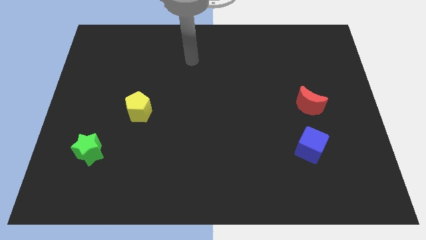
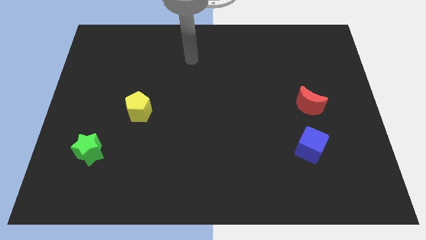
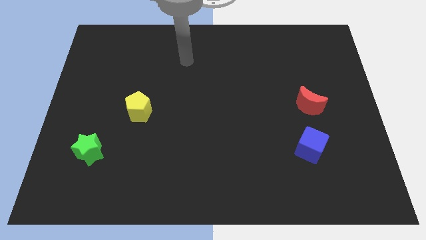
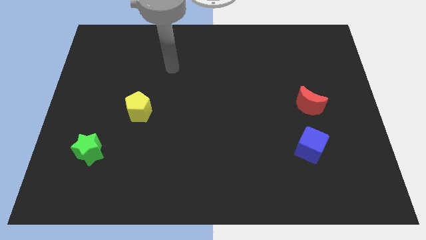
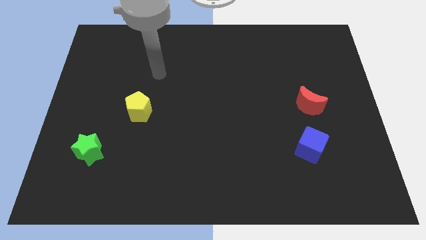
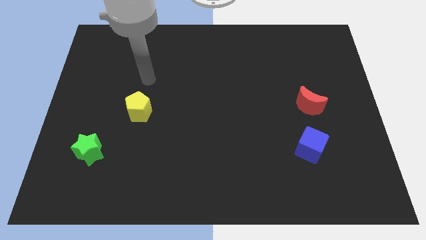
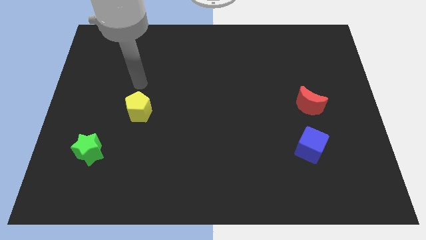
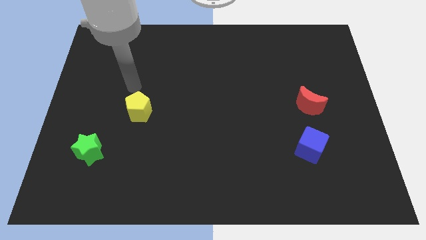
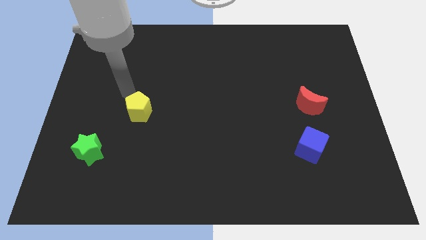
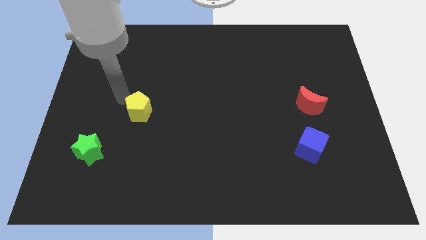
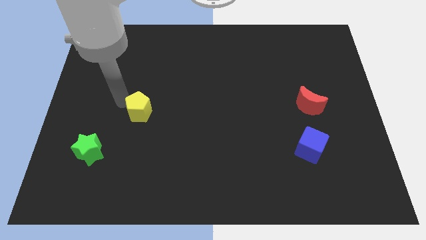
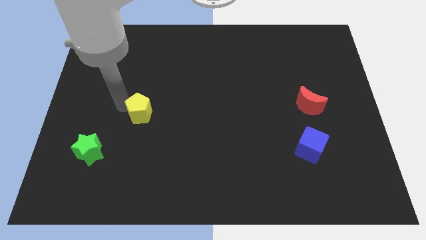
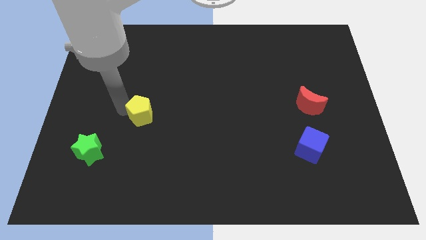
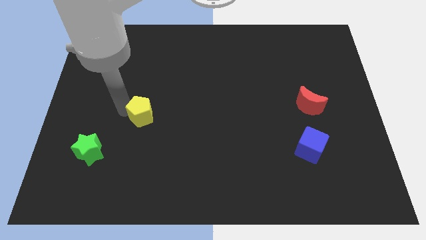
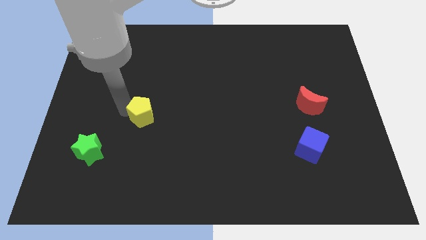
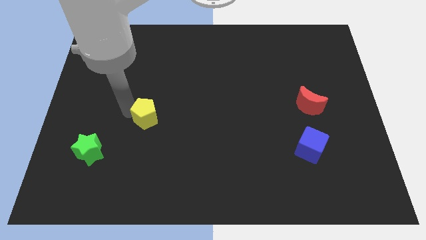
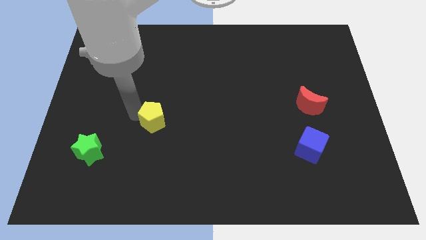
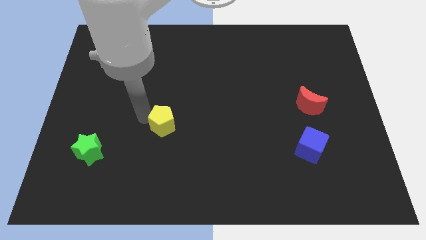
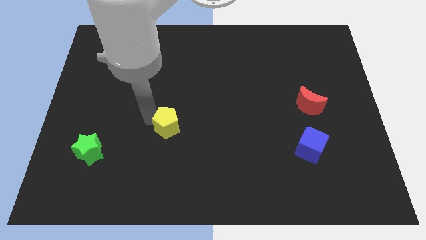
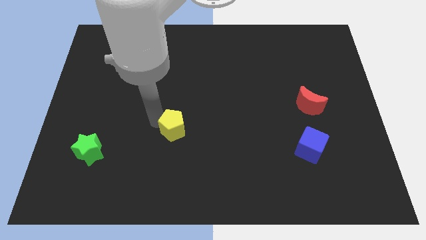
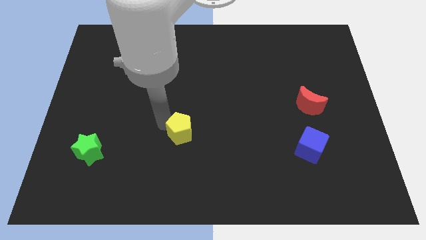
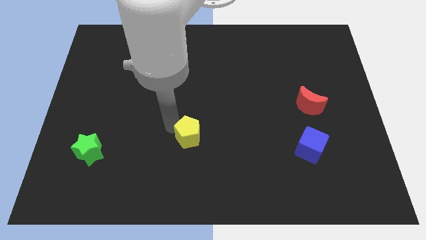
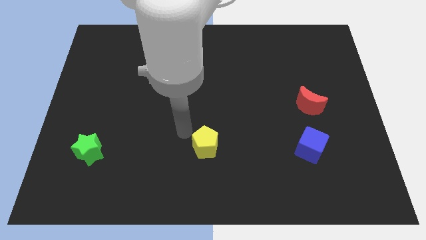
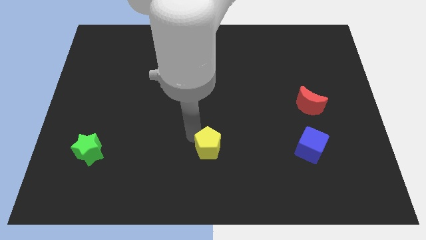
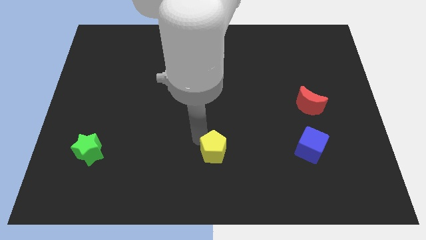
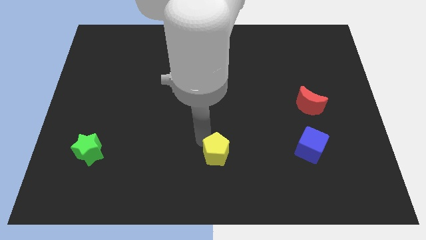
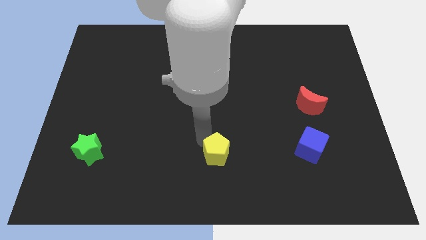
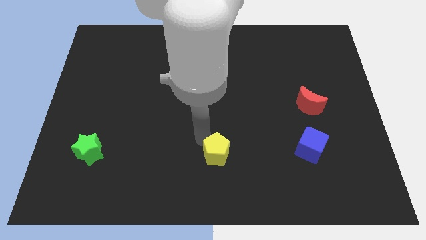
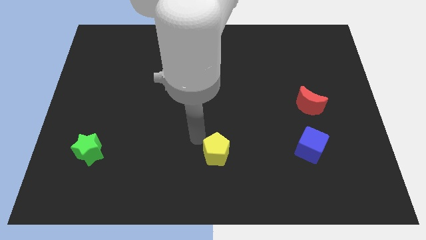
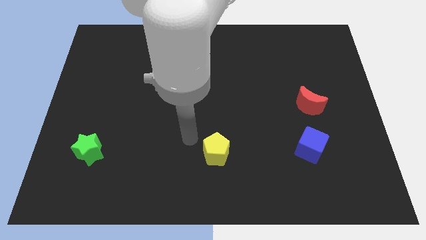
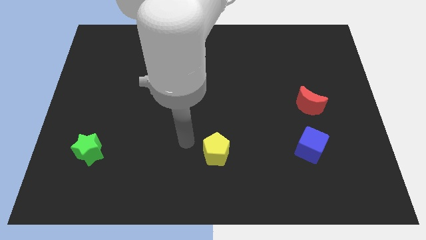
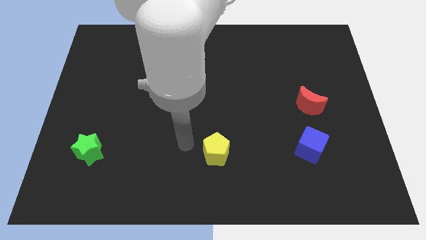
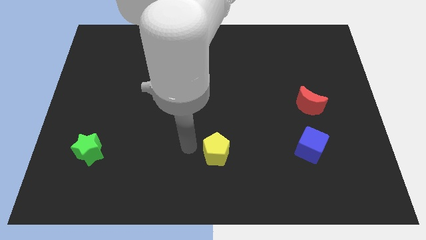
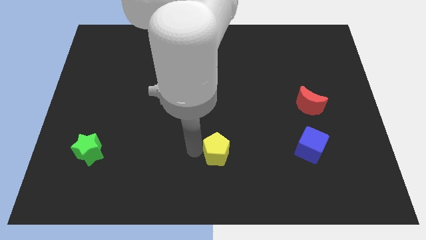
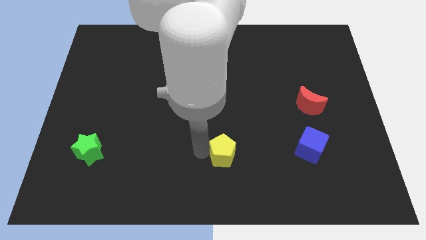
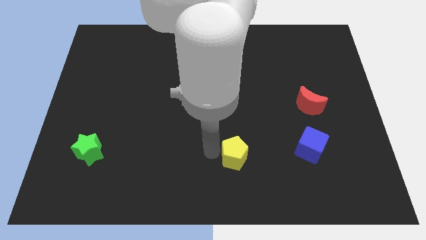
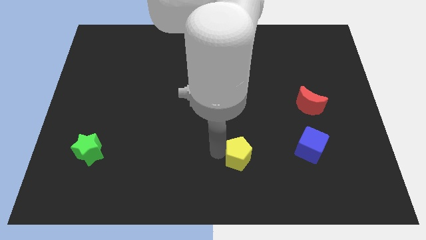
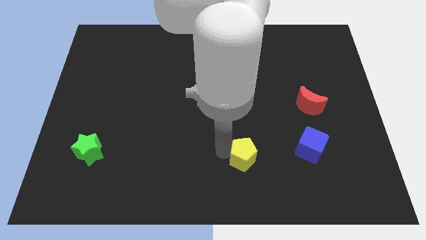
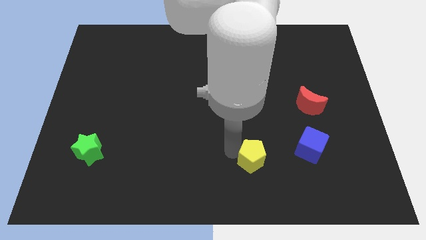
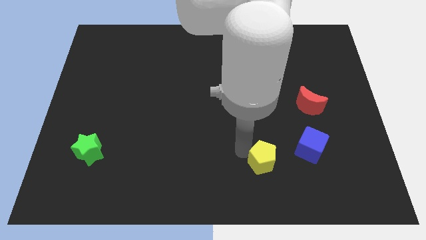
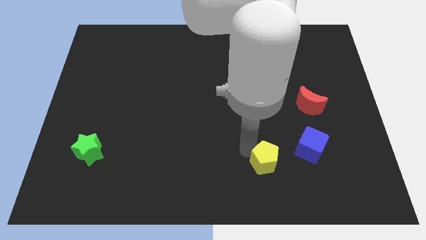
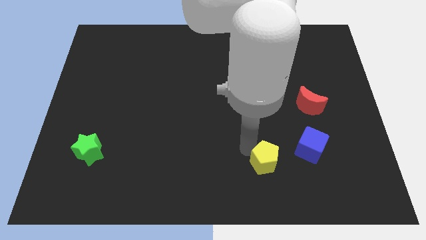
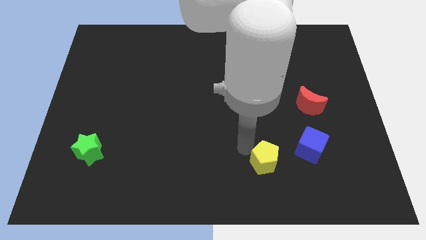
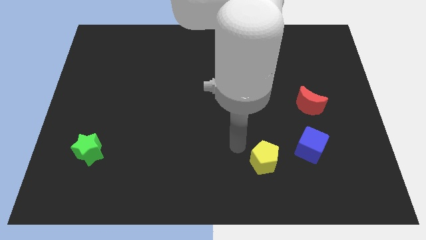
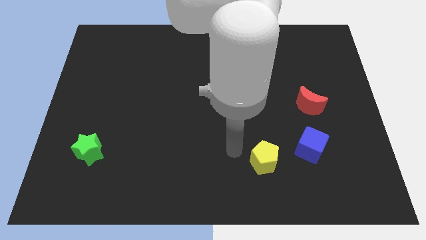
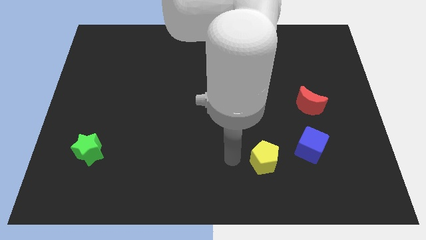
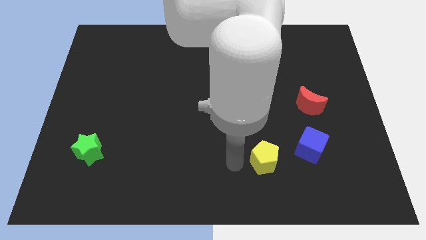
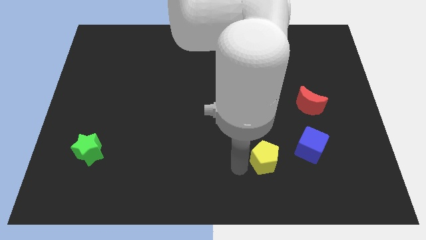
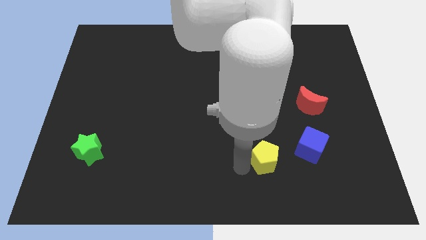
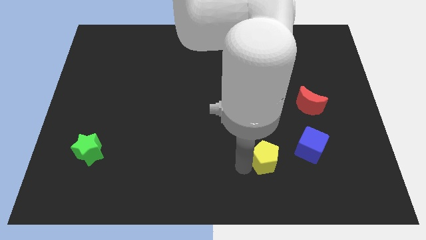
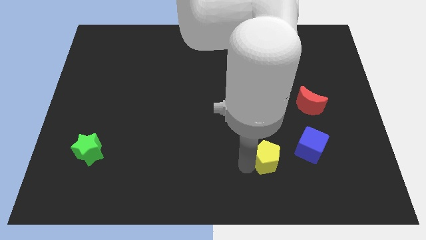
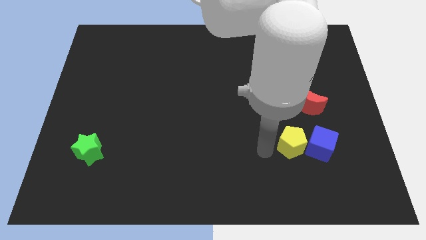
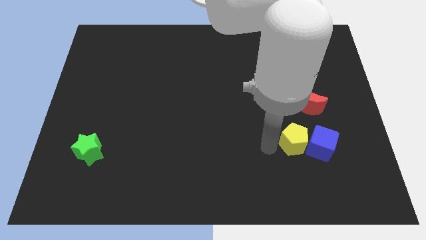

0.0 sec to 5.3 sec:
put the yellow pentagon close to the blue block

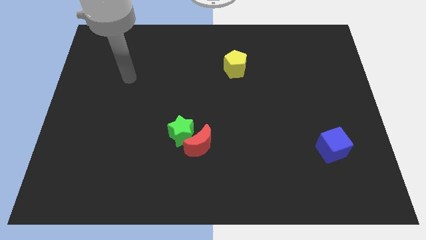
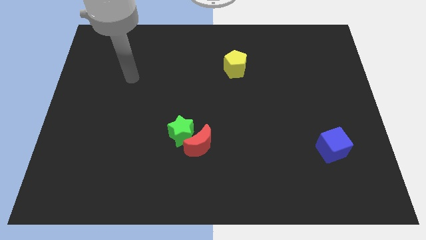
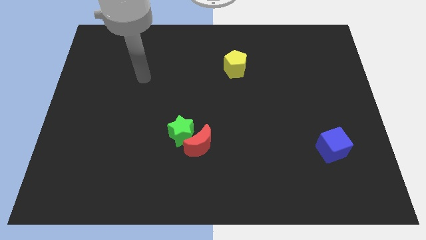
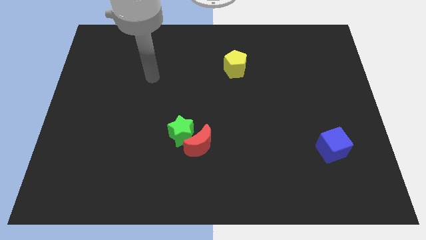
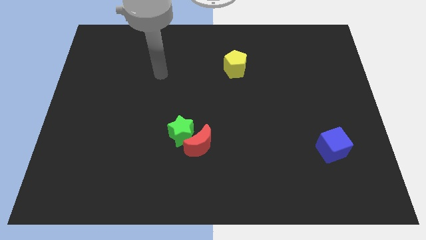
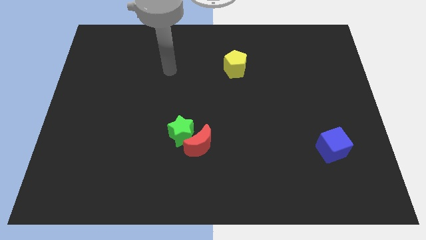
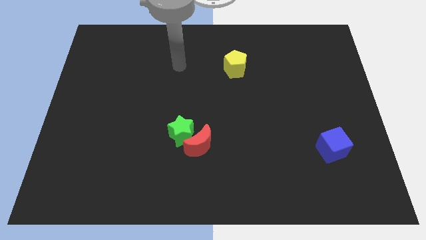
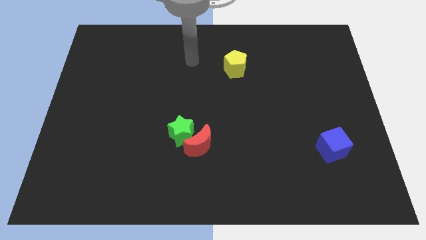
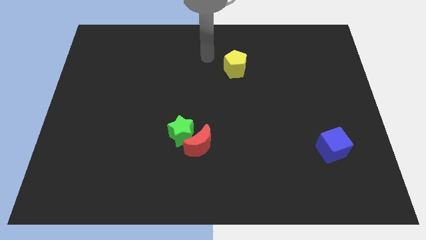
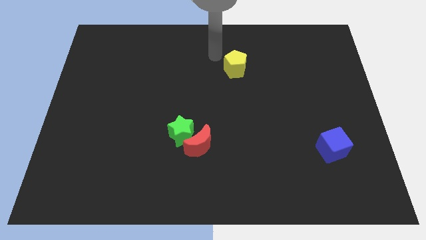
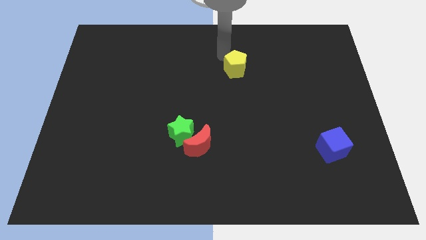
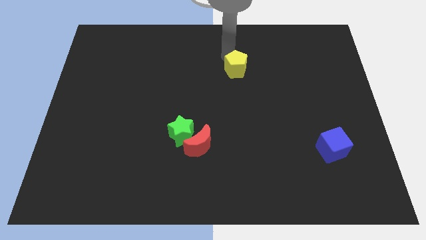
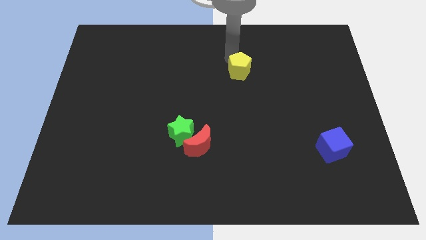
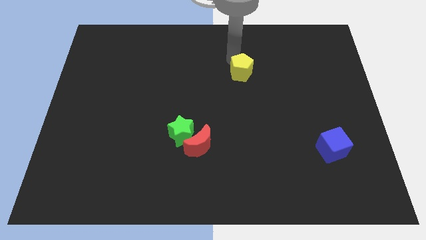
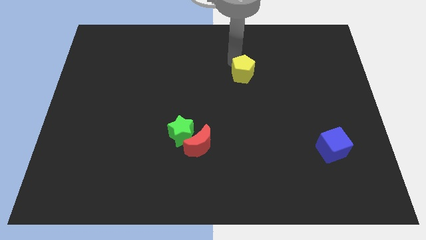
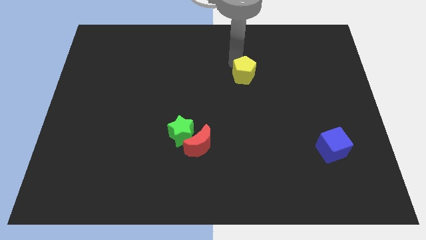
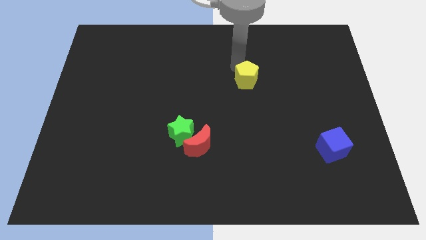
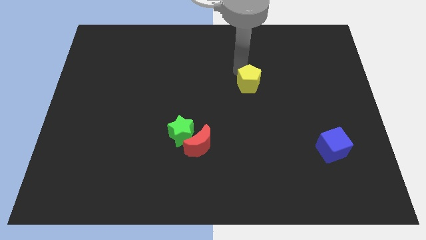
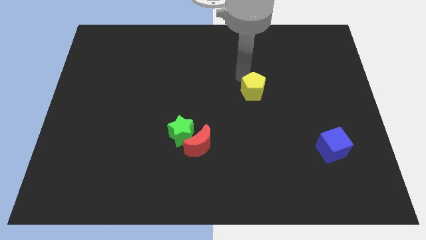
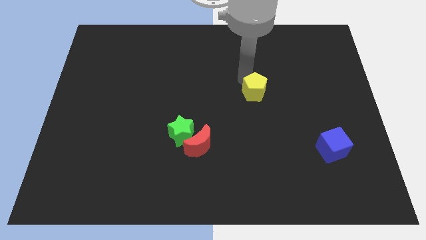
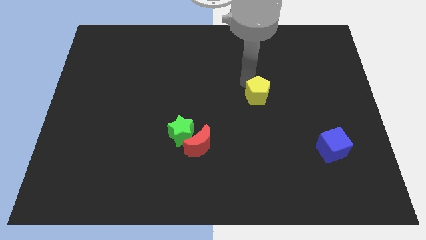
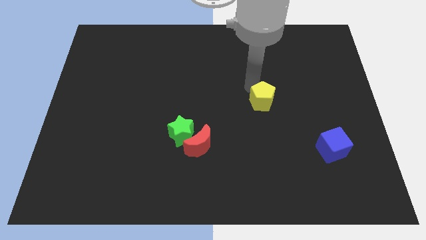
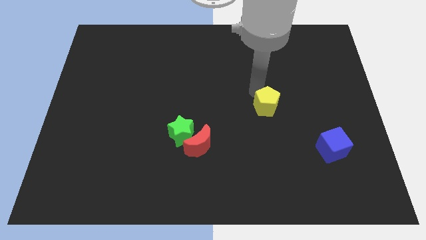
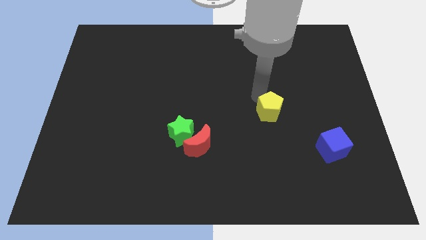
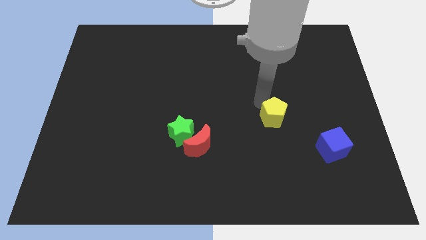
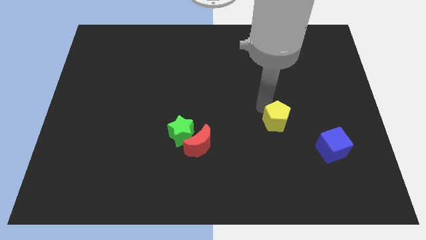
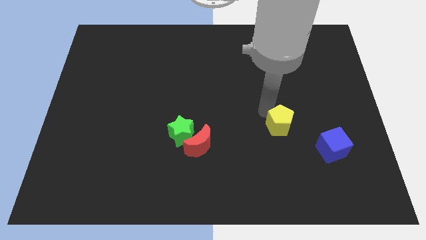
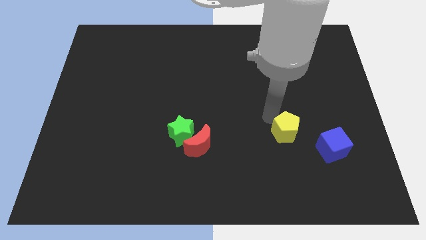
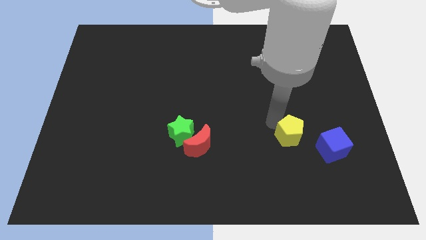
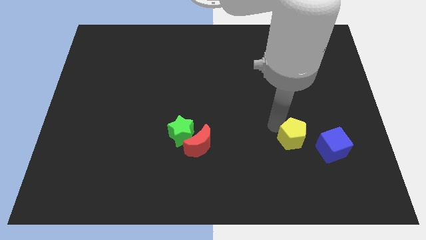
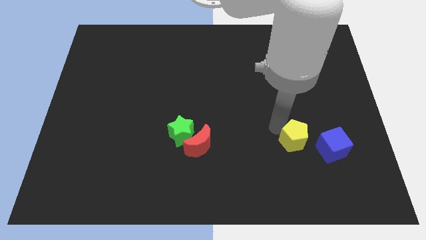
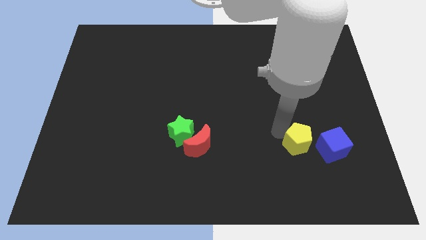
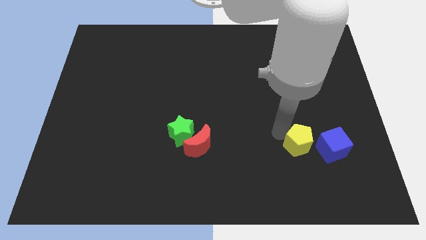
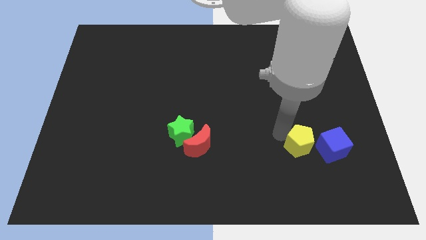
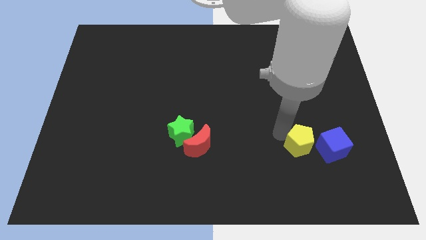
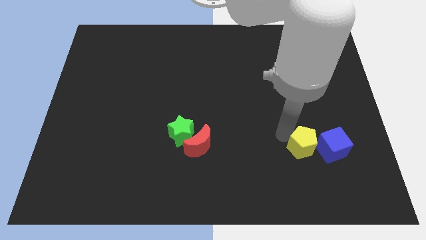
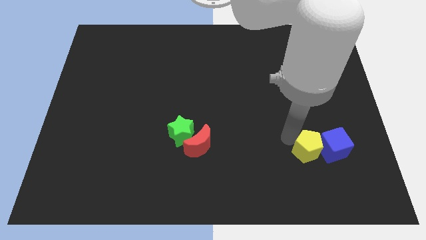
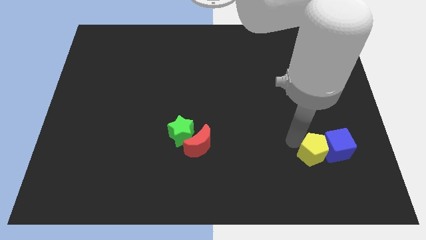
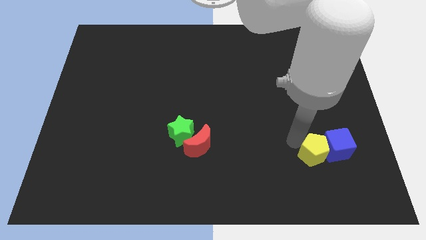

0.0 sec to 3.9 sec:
slide the yellow block next to the cube
